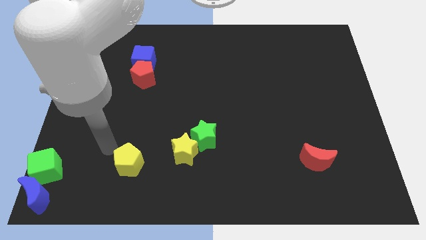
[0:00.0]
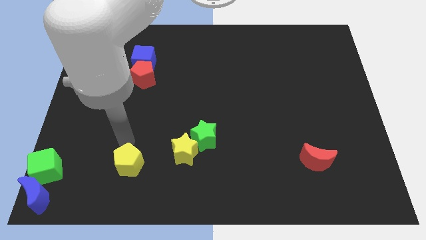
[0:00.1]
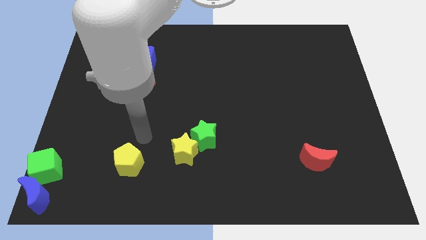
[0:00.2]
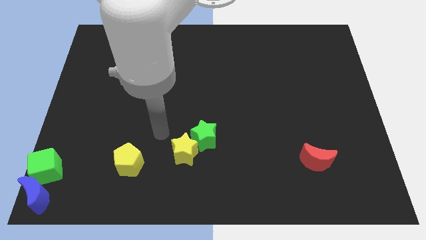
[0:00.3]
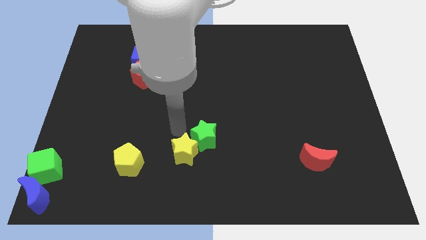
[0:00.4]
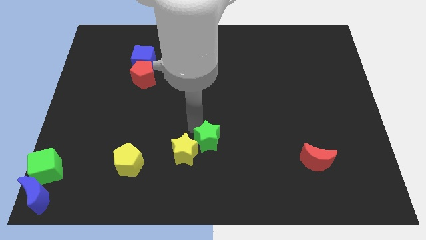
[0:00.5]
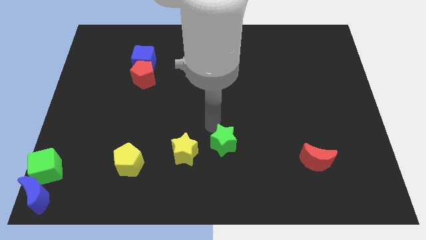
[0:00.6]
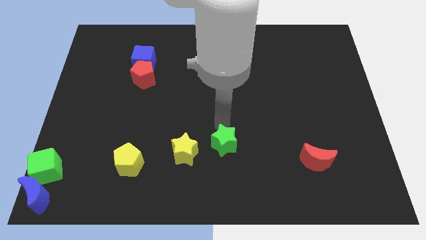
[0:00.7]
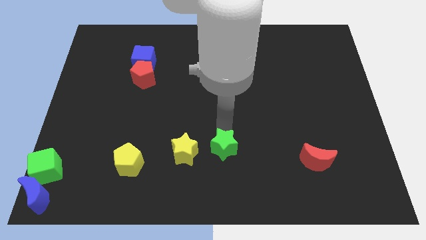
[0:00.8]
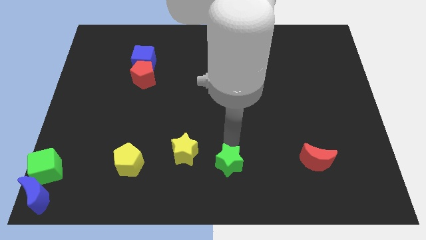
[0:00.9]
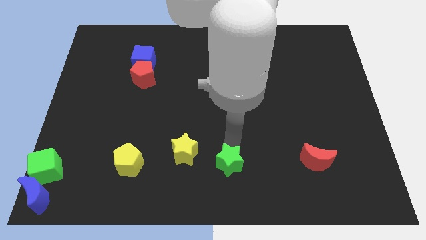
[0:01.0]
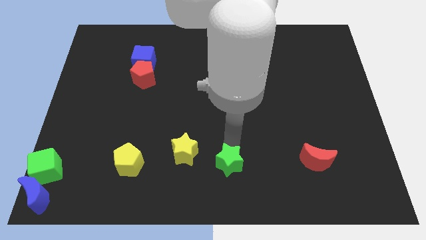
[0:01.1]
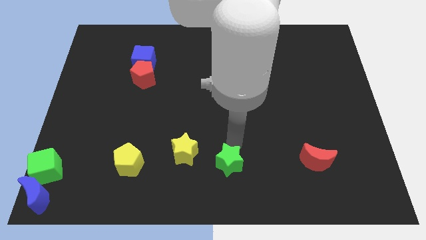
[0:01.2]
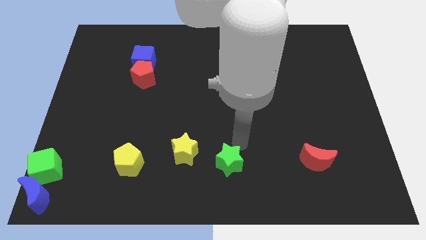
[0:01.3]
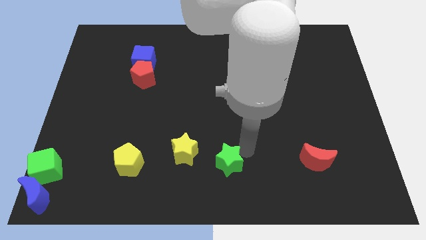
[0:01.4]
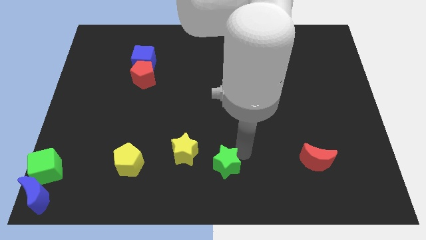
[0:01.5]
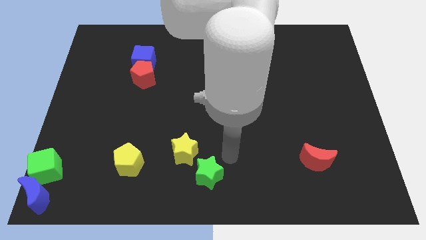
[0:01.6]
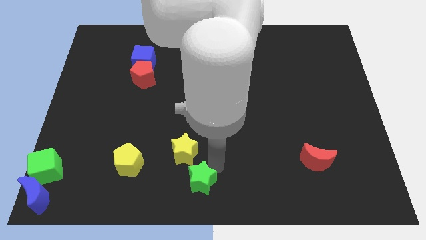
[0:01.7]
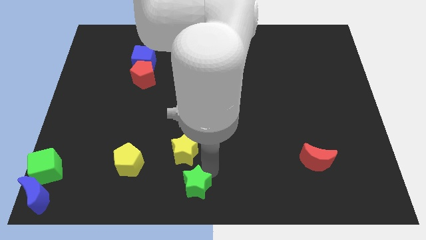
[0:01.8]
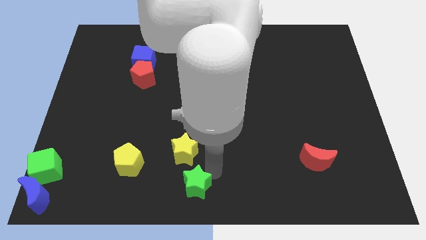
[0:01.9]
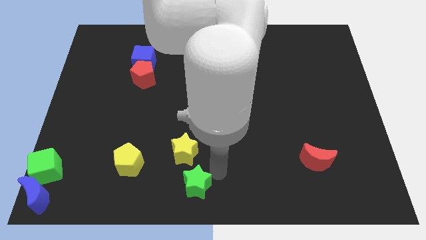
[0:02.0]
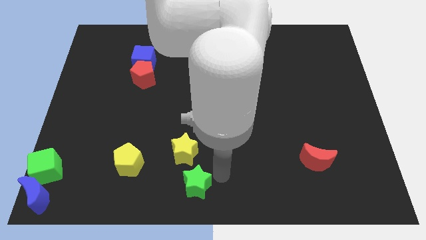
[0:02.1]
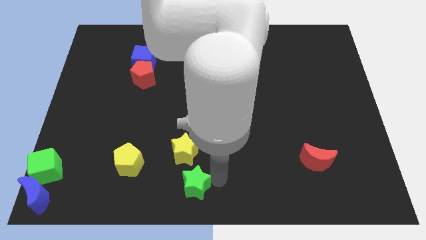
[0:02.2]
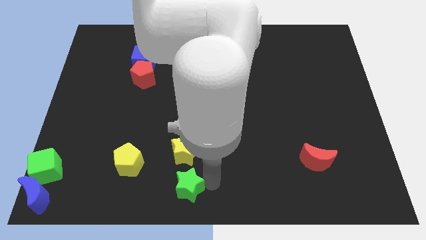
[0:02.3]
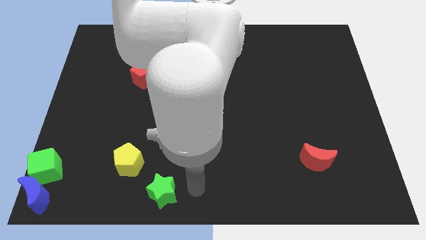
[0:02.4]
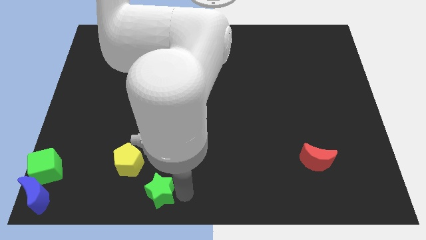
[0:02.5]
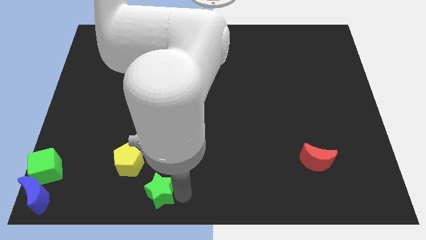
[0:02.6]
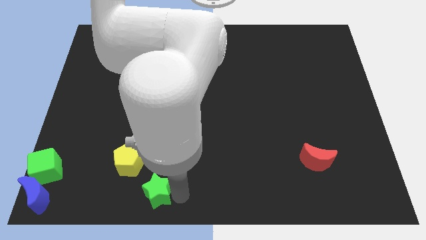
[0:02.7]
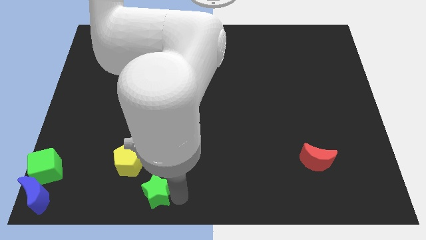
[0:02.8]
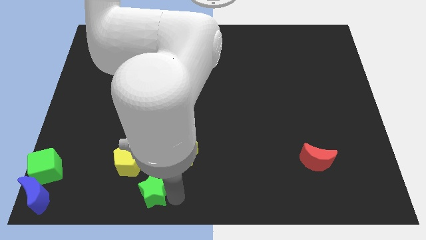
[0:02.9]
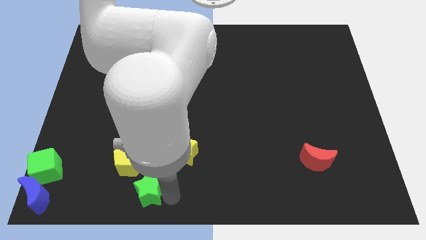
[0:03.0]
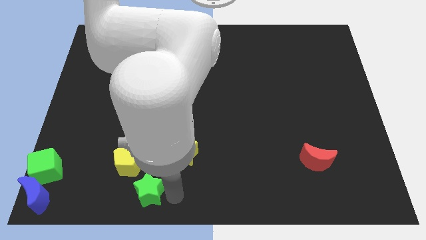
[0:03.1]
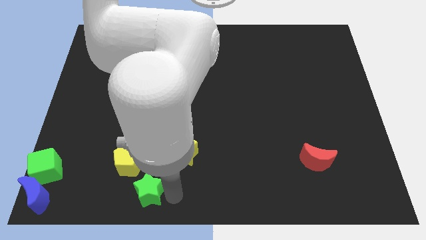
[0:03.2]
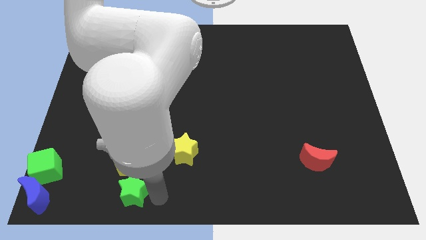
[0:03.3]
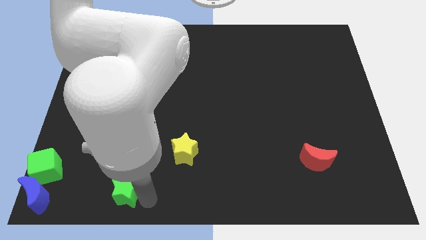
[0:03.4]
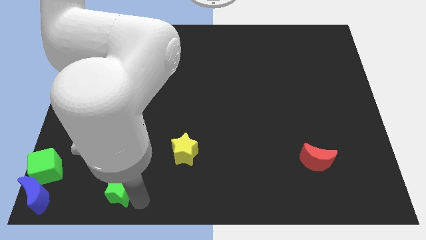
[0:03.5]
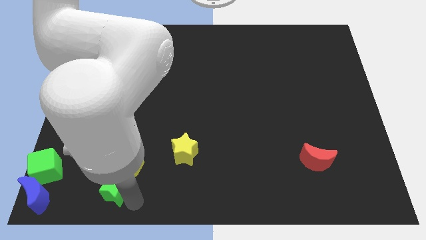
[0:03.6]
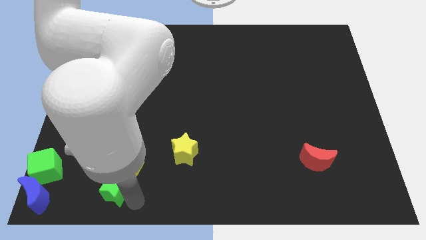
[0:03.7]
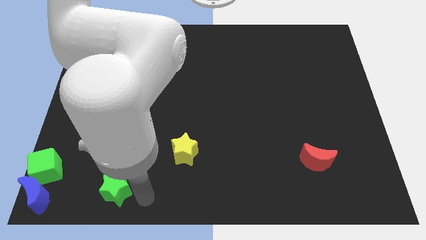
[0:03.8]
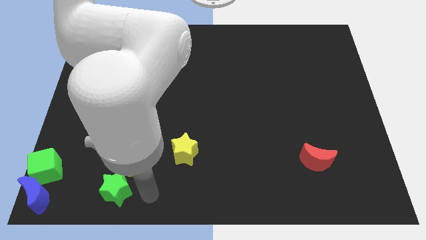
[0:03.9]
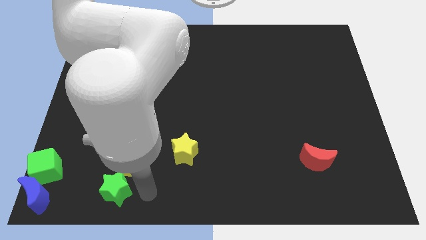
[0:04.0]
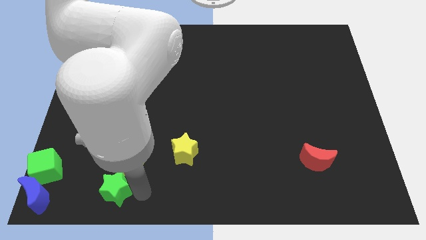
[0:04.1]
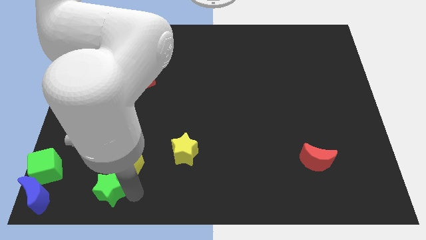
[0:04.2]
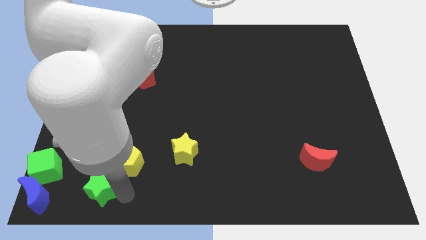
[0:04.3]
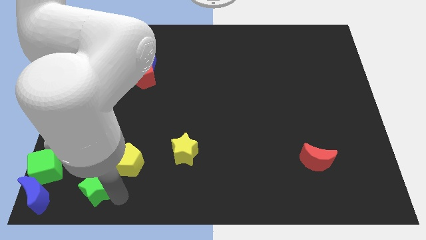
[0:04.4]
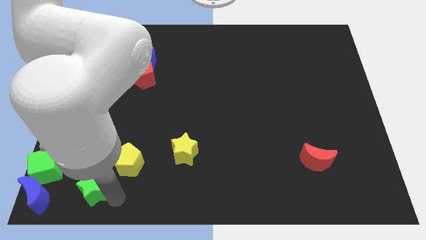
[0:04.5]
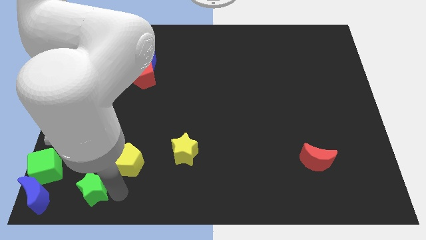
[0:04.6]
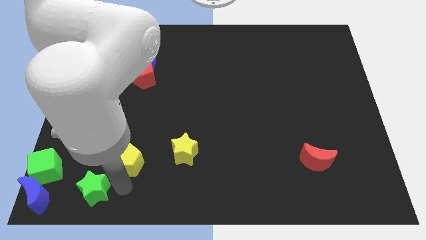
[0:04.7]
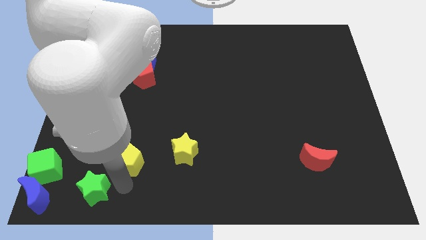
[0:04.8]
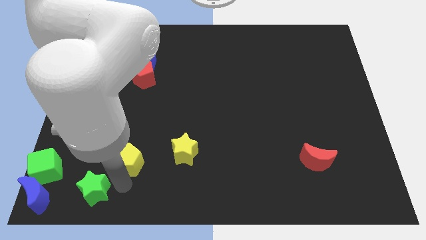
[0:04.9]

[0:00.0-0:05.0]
move green star towards blue moon

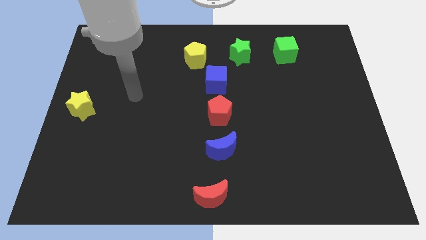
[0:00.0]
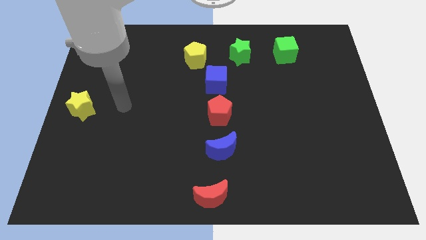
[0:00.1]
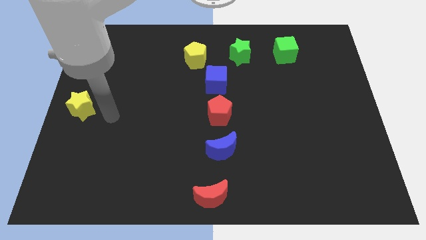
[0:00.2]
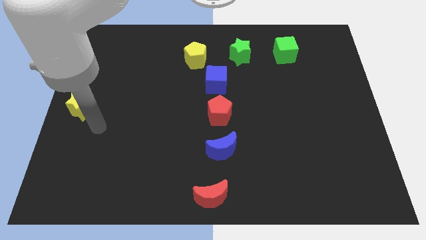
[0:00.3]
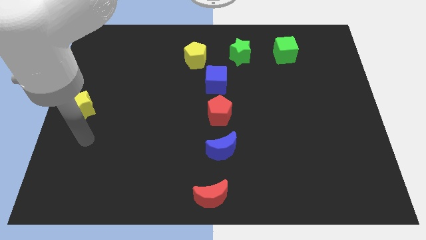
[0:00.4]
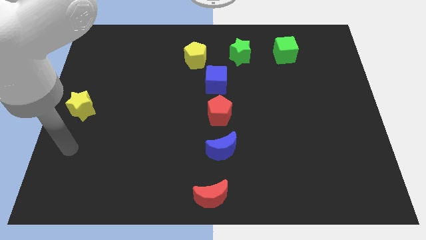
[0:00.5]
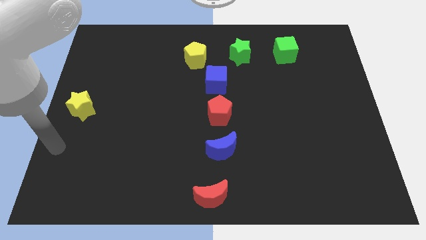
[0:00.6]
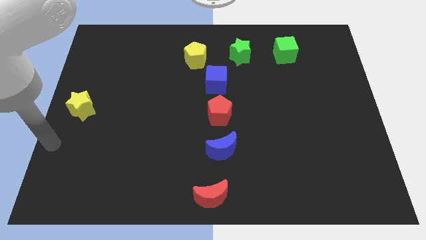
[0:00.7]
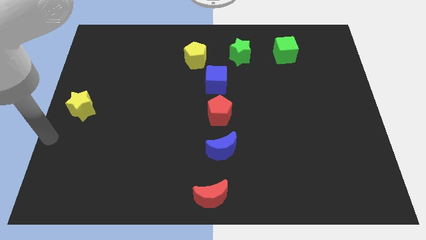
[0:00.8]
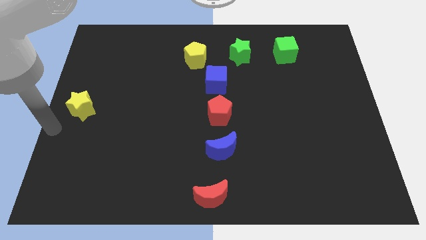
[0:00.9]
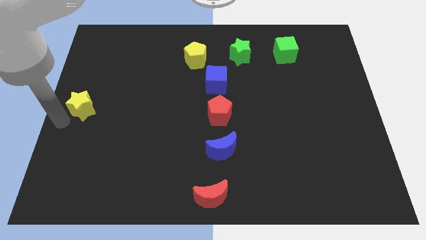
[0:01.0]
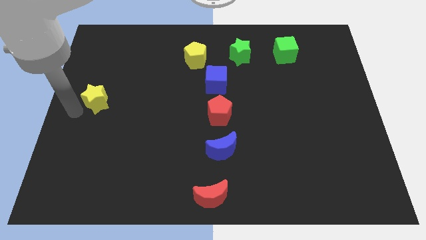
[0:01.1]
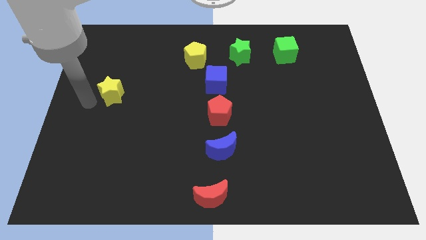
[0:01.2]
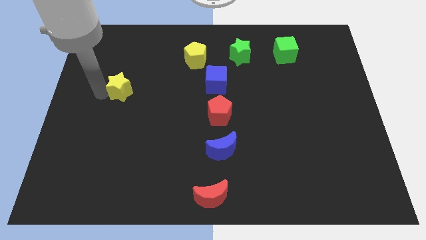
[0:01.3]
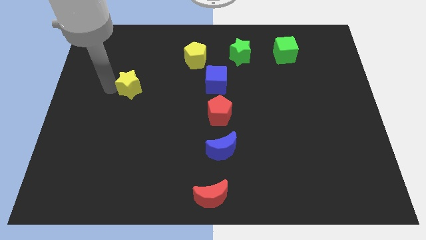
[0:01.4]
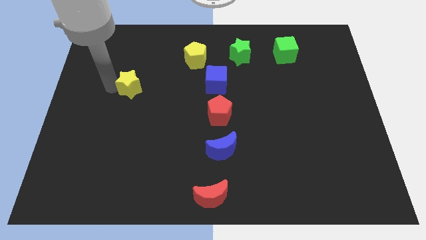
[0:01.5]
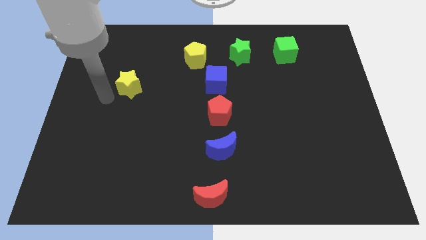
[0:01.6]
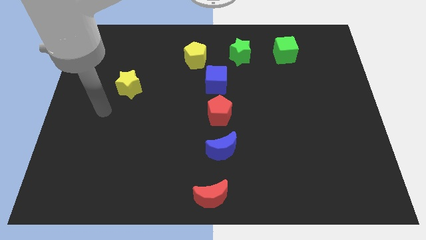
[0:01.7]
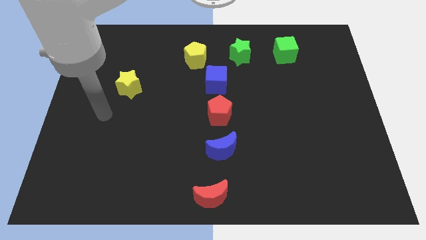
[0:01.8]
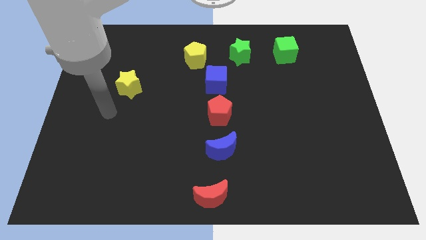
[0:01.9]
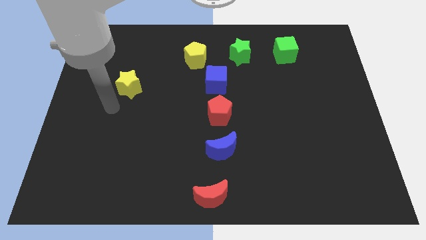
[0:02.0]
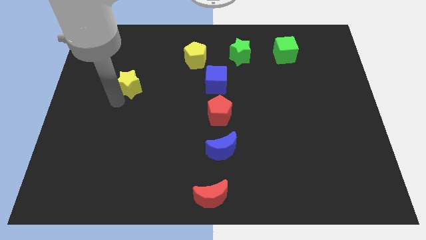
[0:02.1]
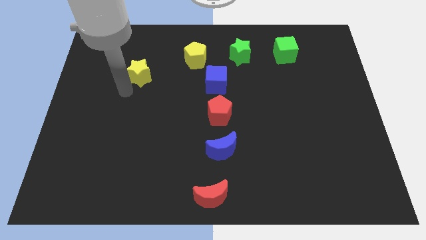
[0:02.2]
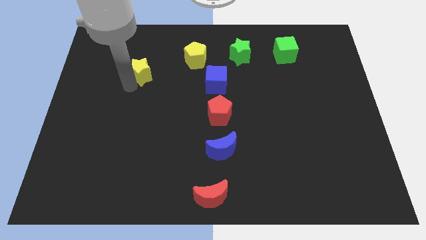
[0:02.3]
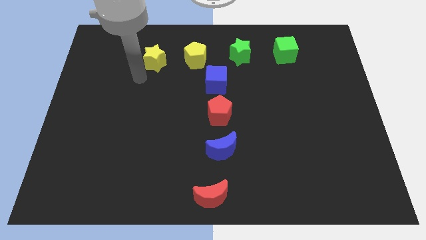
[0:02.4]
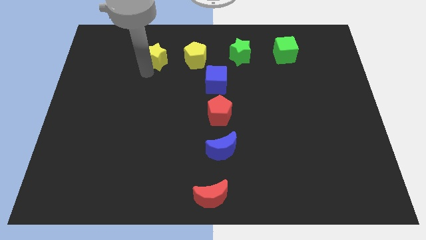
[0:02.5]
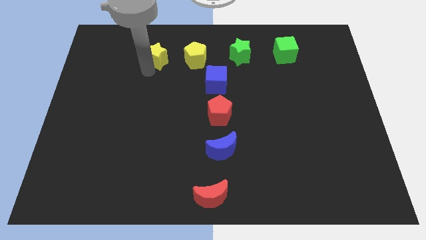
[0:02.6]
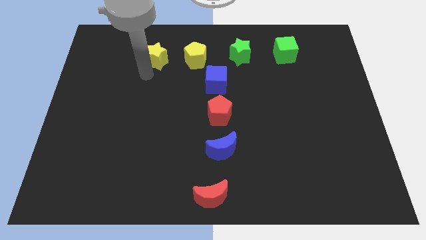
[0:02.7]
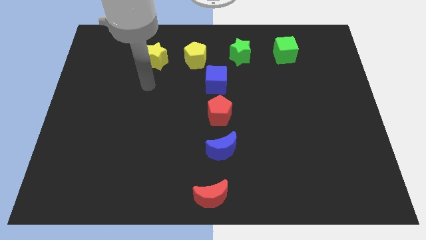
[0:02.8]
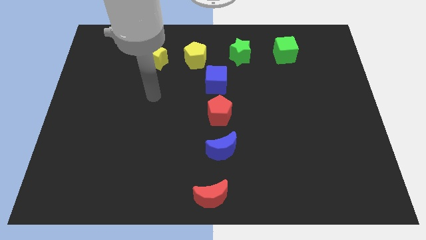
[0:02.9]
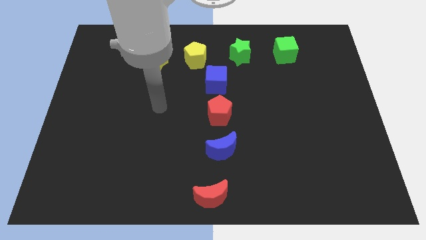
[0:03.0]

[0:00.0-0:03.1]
move the yellow star at the left of the yellow pentagon

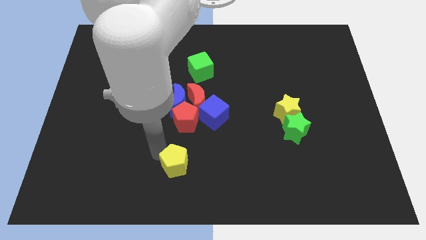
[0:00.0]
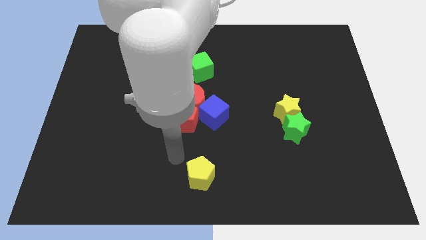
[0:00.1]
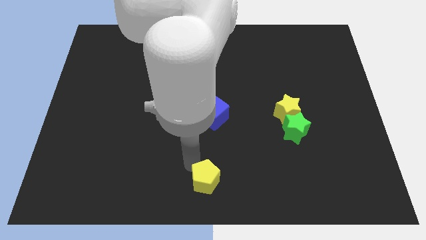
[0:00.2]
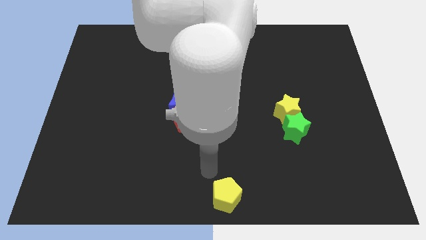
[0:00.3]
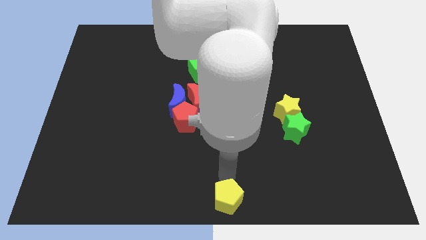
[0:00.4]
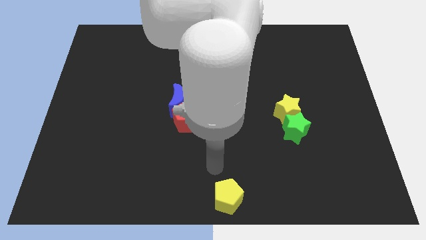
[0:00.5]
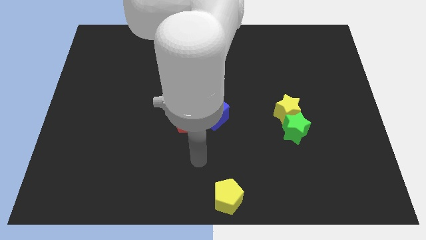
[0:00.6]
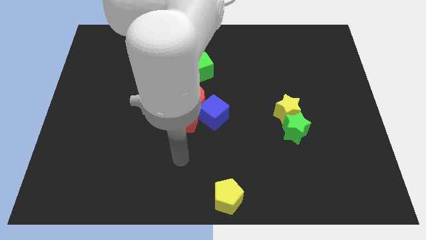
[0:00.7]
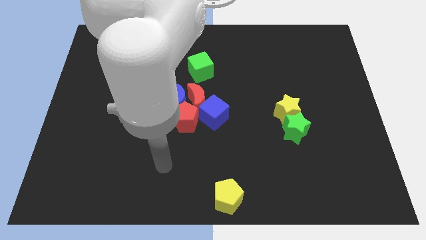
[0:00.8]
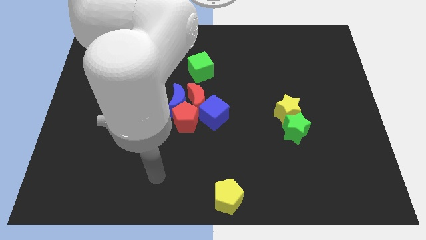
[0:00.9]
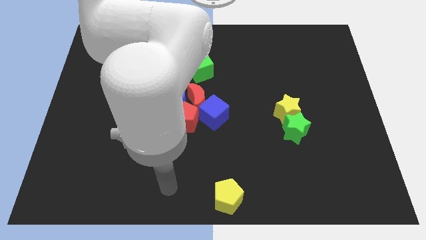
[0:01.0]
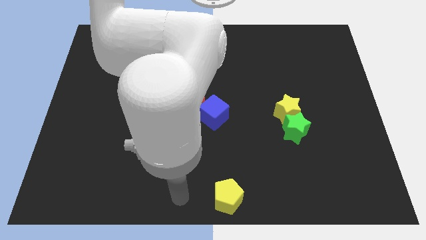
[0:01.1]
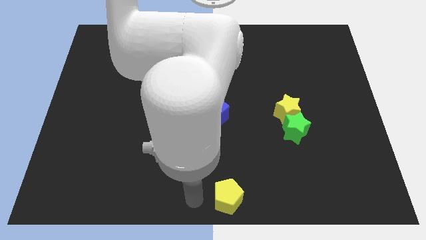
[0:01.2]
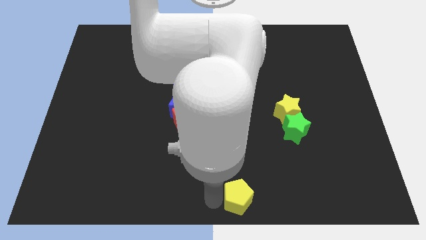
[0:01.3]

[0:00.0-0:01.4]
put the yellow pentagon at the bottom center
